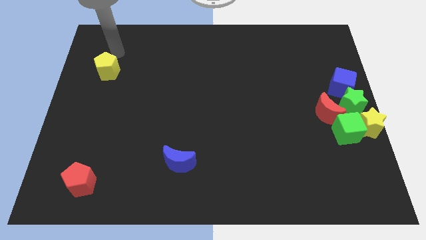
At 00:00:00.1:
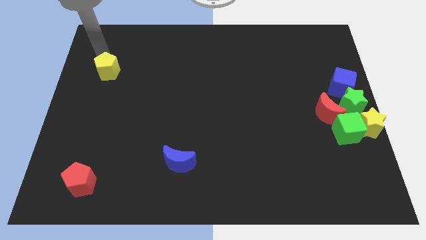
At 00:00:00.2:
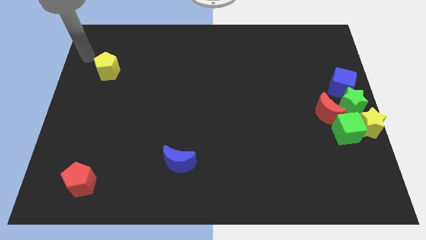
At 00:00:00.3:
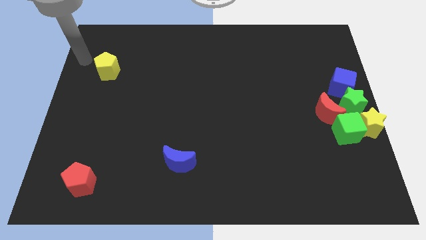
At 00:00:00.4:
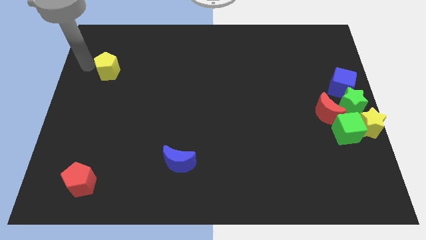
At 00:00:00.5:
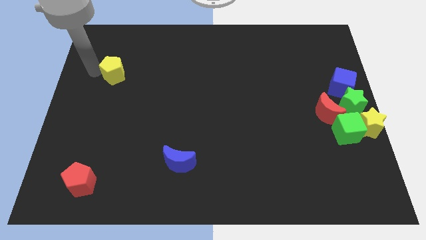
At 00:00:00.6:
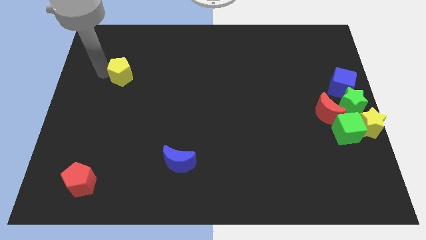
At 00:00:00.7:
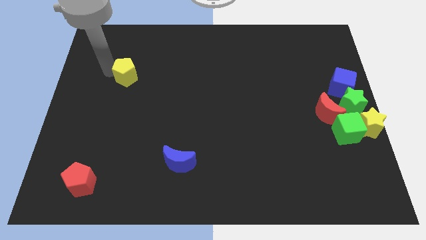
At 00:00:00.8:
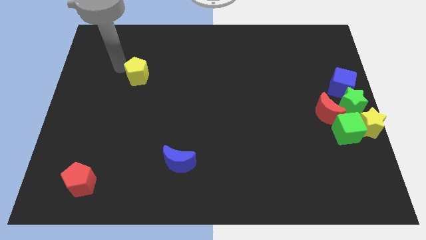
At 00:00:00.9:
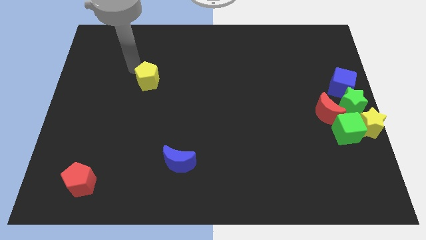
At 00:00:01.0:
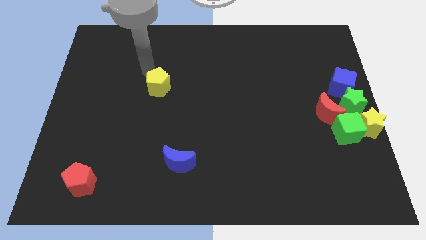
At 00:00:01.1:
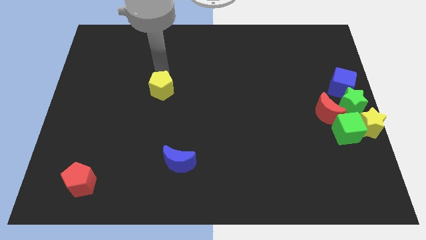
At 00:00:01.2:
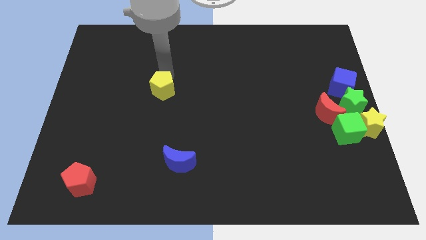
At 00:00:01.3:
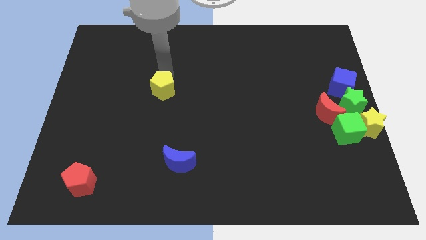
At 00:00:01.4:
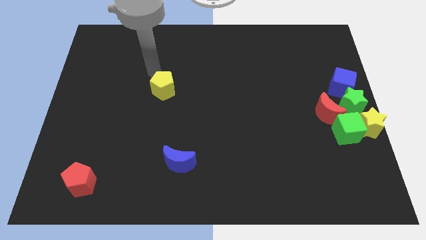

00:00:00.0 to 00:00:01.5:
push the yellow pentagon towards the blue crescent

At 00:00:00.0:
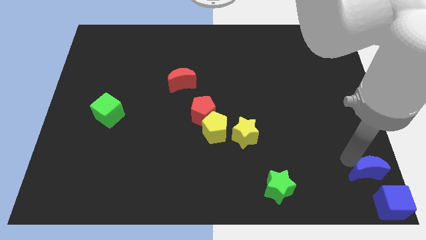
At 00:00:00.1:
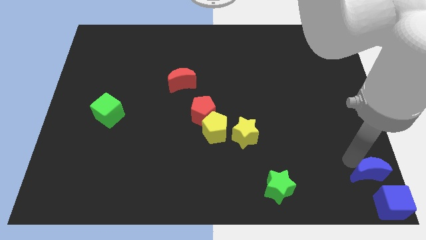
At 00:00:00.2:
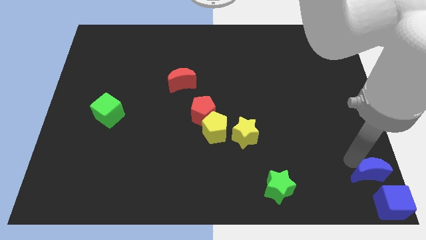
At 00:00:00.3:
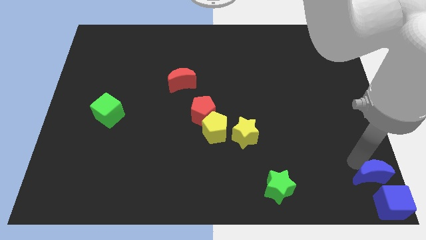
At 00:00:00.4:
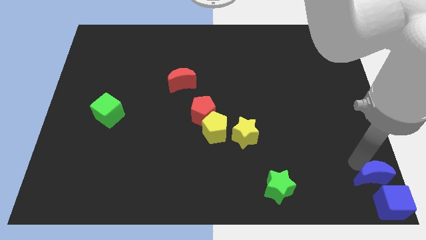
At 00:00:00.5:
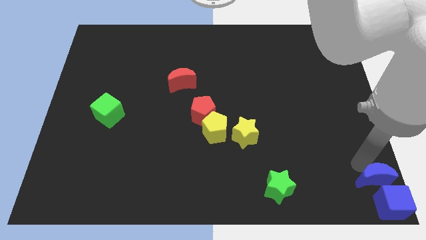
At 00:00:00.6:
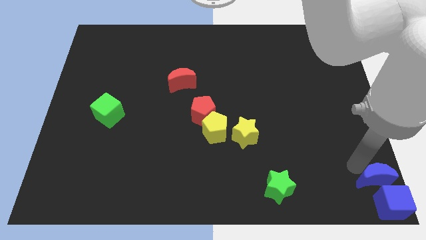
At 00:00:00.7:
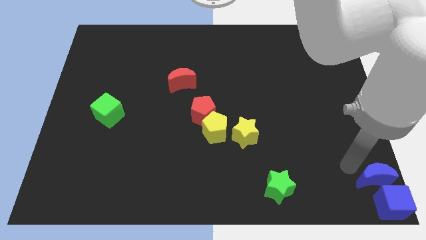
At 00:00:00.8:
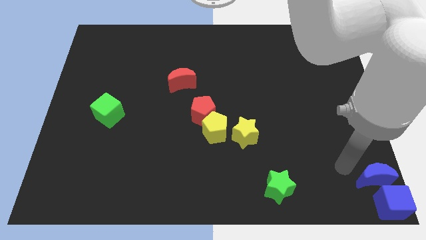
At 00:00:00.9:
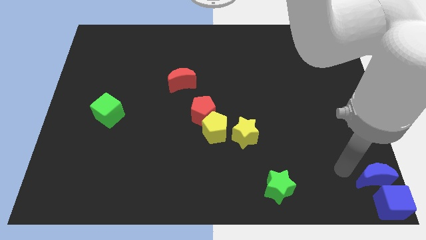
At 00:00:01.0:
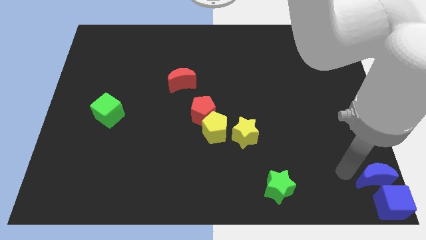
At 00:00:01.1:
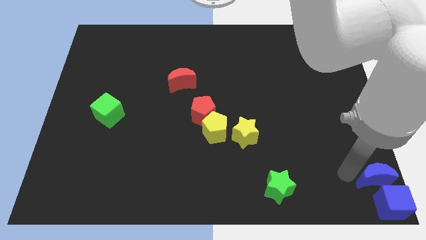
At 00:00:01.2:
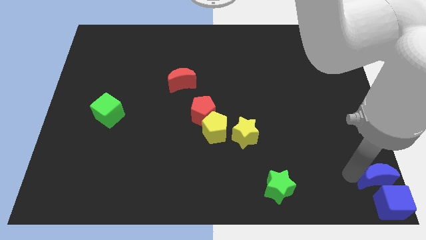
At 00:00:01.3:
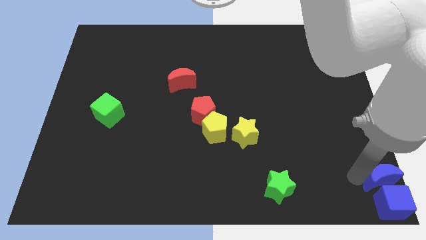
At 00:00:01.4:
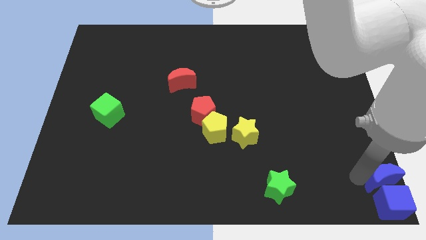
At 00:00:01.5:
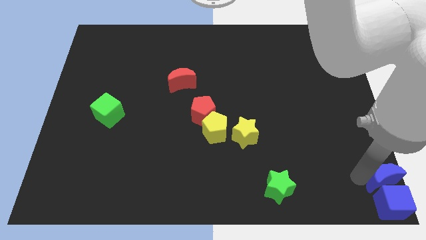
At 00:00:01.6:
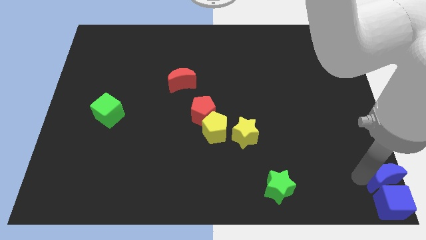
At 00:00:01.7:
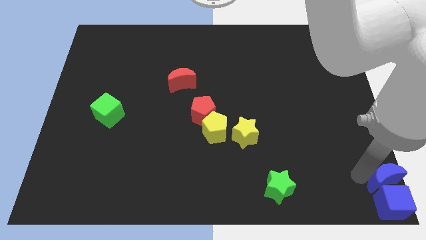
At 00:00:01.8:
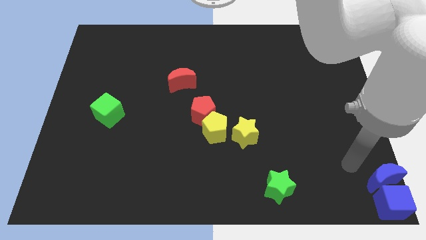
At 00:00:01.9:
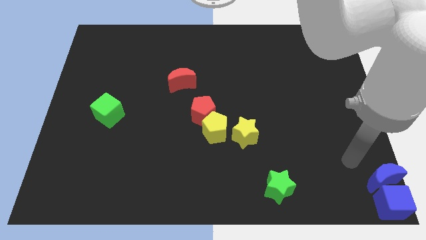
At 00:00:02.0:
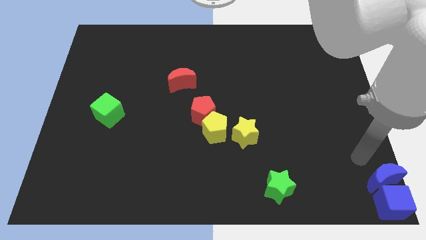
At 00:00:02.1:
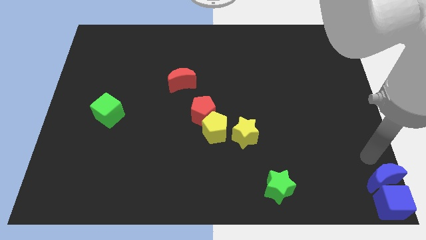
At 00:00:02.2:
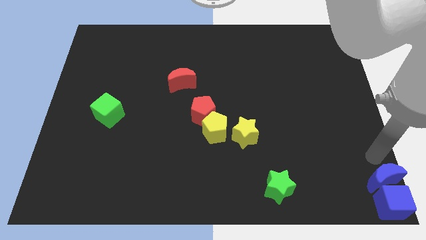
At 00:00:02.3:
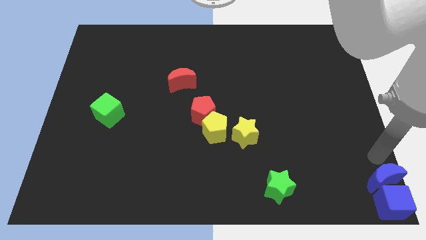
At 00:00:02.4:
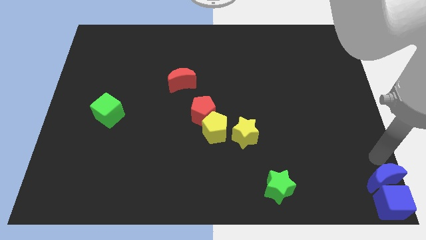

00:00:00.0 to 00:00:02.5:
move the blue moon on top of the blue cube

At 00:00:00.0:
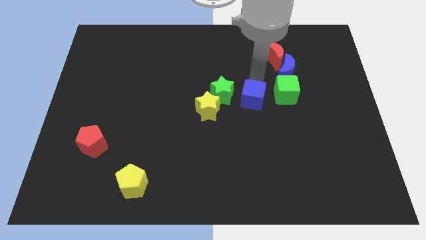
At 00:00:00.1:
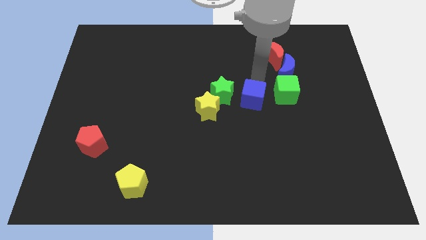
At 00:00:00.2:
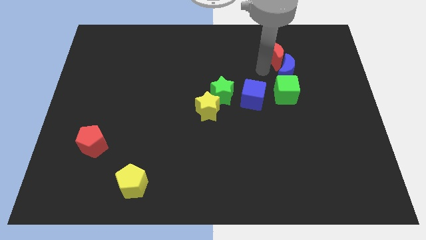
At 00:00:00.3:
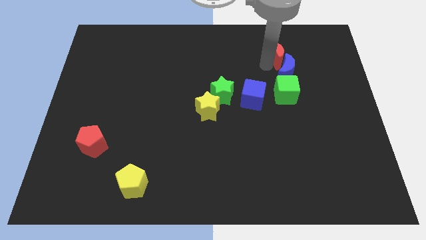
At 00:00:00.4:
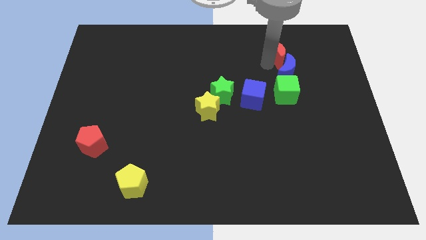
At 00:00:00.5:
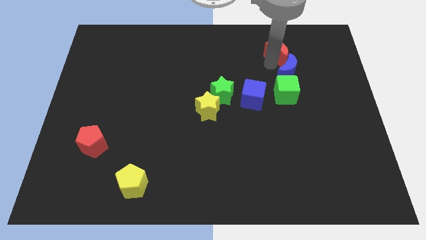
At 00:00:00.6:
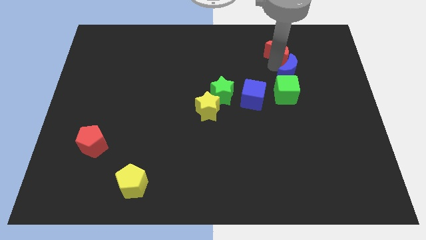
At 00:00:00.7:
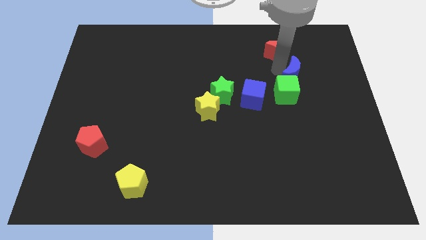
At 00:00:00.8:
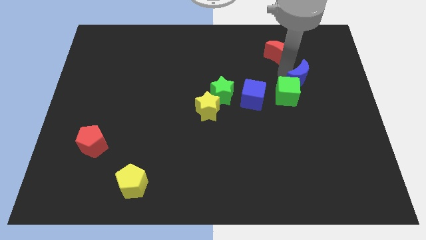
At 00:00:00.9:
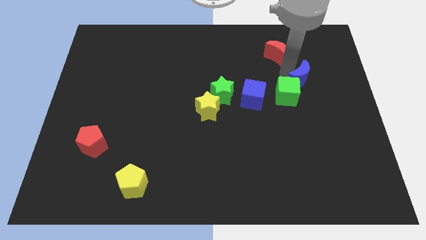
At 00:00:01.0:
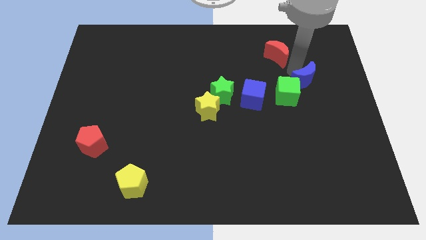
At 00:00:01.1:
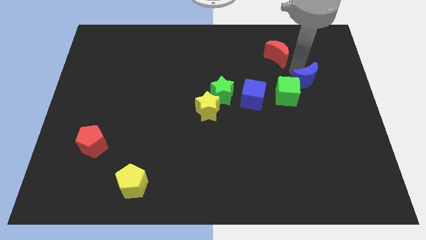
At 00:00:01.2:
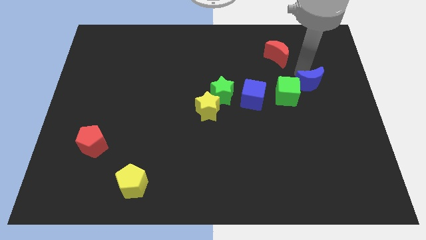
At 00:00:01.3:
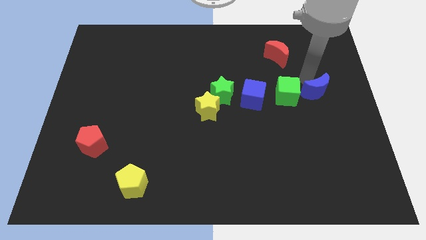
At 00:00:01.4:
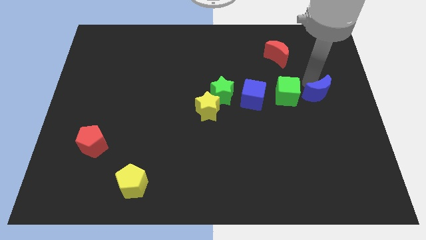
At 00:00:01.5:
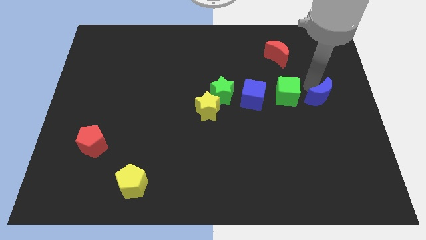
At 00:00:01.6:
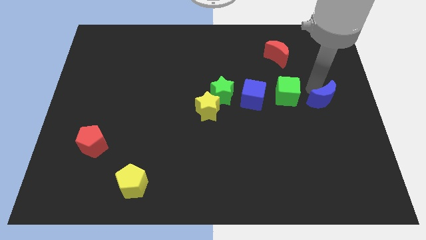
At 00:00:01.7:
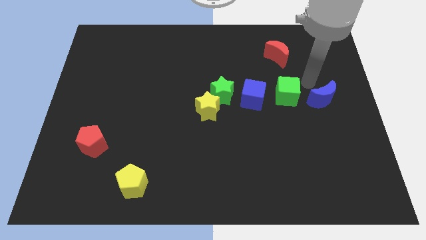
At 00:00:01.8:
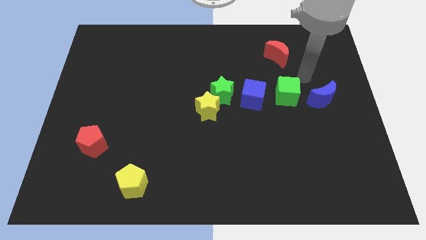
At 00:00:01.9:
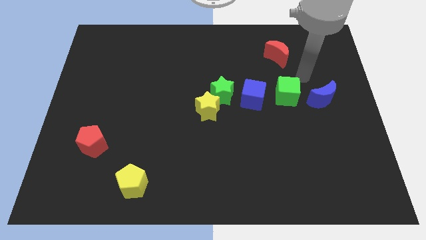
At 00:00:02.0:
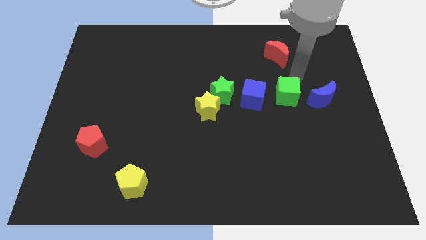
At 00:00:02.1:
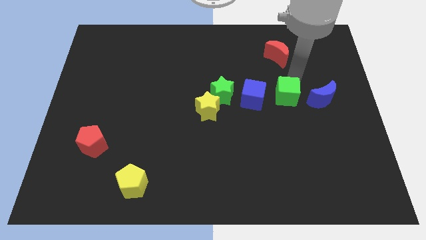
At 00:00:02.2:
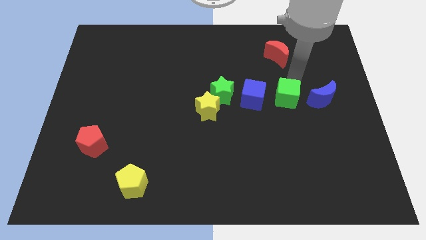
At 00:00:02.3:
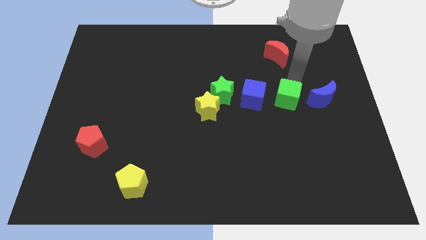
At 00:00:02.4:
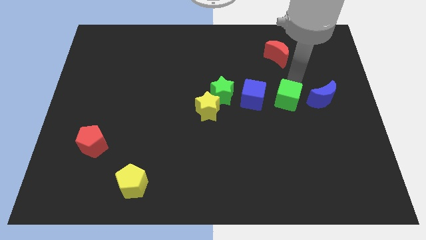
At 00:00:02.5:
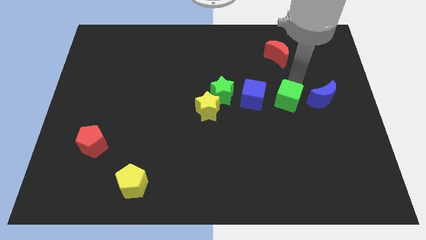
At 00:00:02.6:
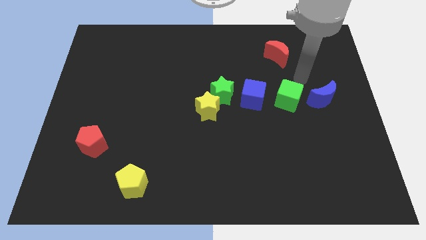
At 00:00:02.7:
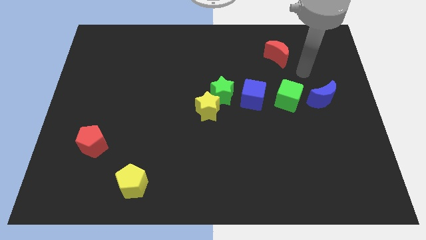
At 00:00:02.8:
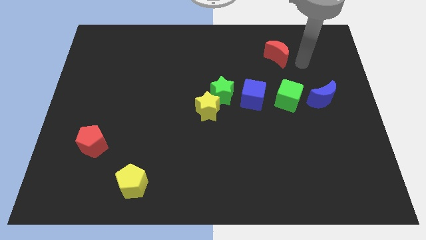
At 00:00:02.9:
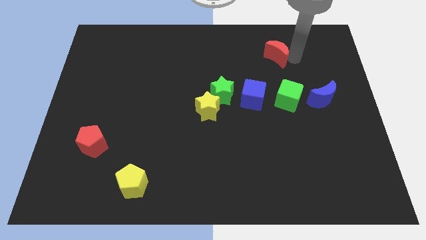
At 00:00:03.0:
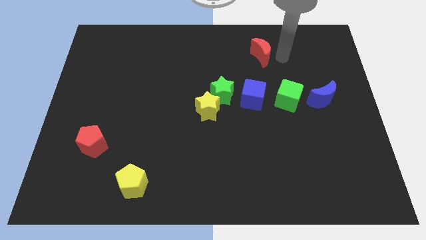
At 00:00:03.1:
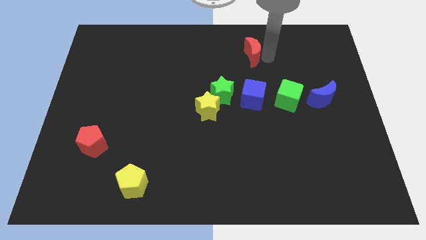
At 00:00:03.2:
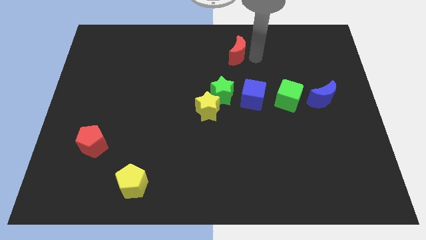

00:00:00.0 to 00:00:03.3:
move your arm away form the green cube

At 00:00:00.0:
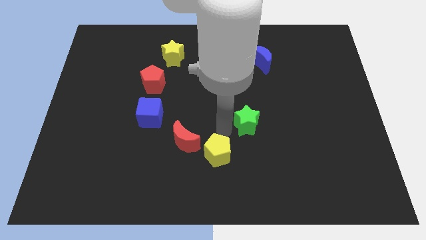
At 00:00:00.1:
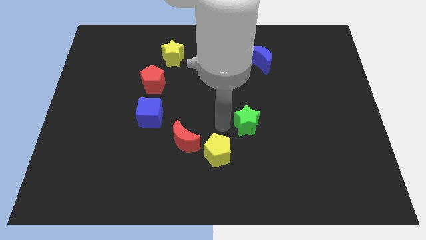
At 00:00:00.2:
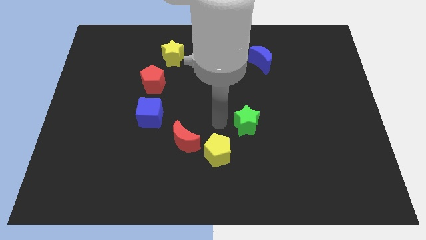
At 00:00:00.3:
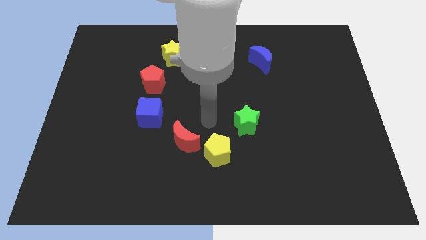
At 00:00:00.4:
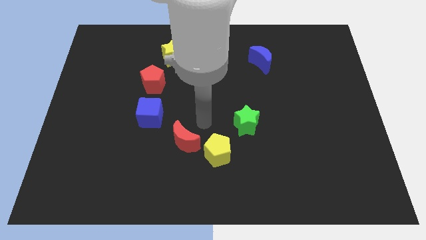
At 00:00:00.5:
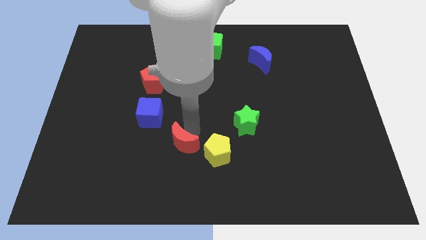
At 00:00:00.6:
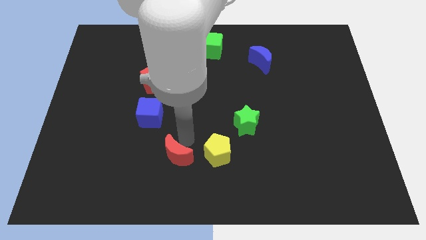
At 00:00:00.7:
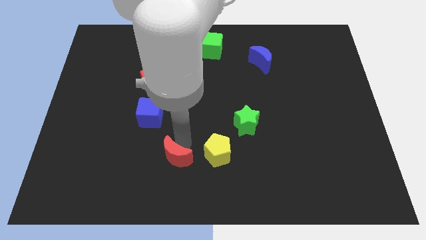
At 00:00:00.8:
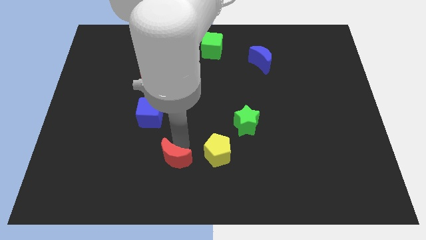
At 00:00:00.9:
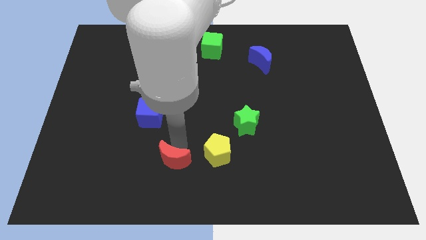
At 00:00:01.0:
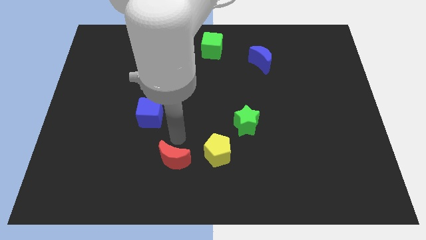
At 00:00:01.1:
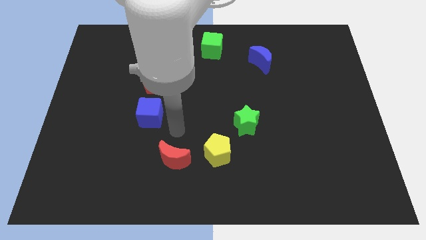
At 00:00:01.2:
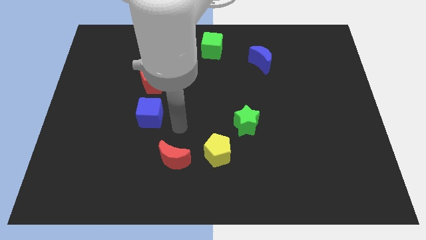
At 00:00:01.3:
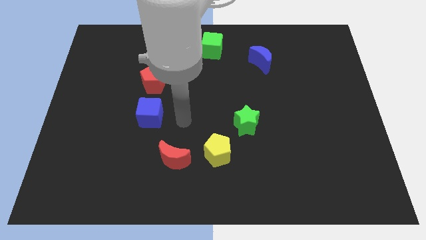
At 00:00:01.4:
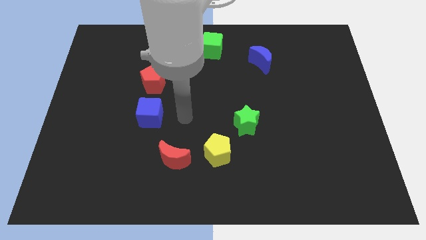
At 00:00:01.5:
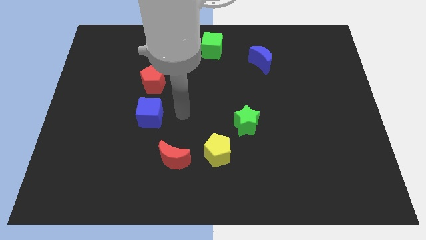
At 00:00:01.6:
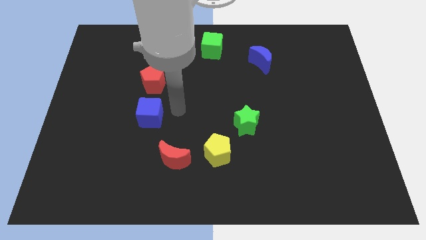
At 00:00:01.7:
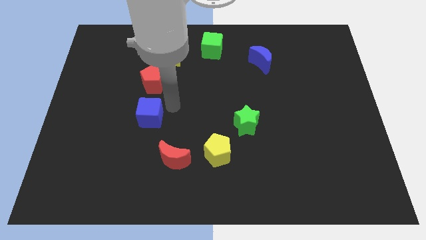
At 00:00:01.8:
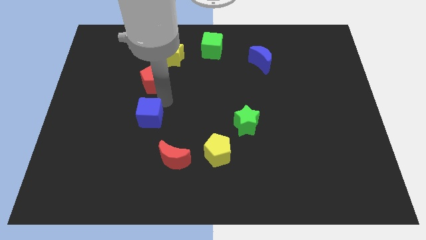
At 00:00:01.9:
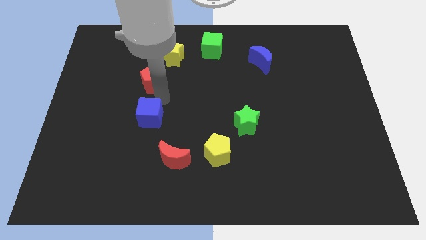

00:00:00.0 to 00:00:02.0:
push the red moon parallel left to the yellow pentagon
